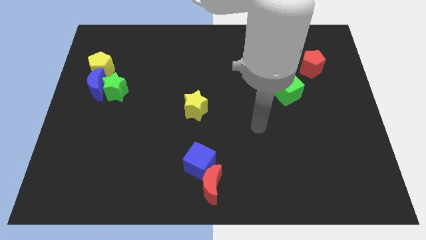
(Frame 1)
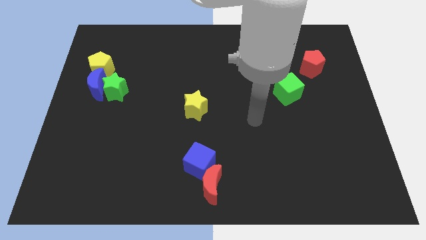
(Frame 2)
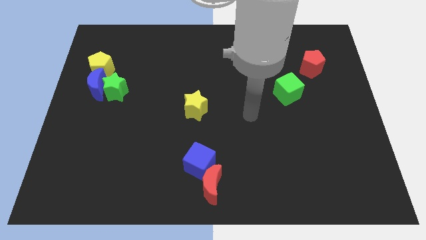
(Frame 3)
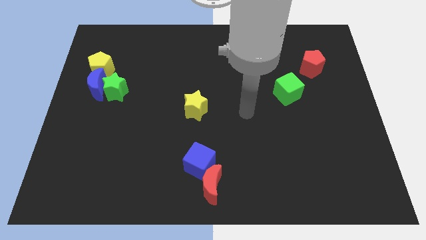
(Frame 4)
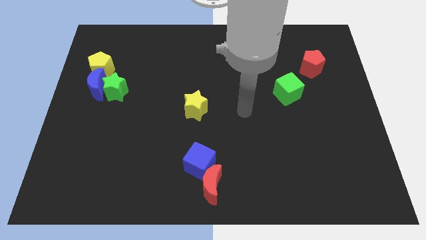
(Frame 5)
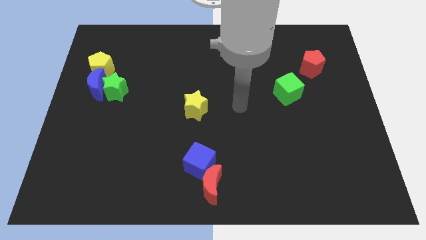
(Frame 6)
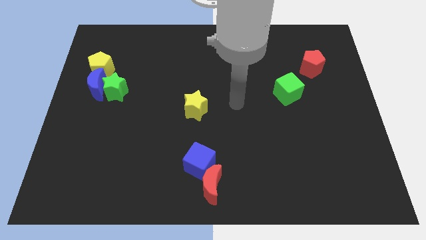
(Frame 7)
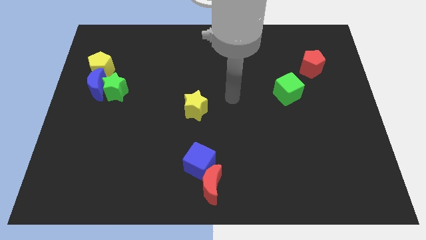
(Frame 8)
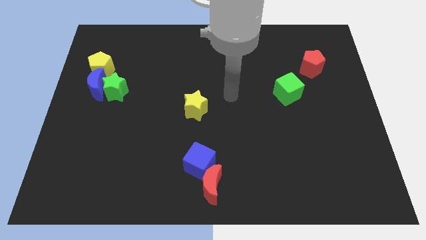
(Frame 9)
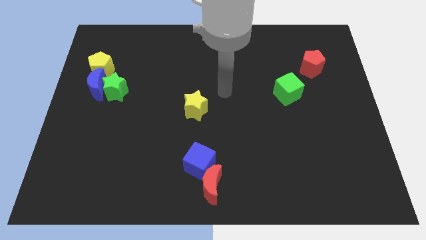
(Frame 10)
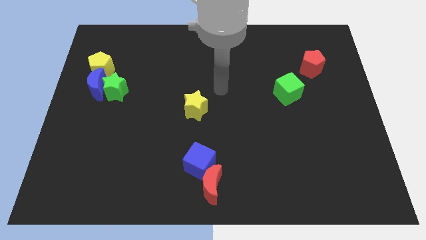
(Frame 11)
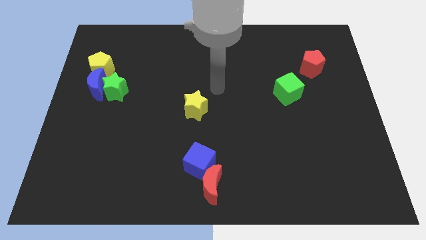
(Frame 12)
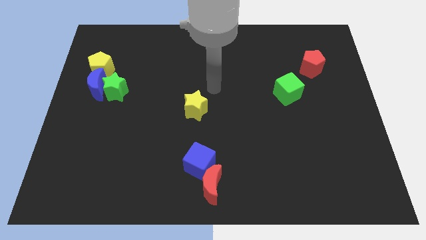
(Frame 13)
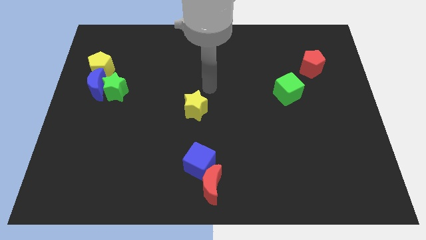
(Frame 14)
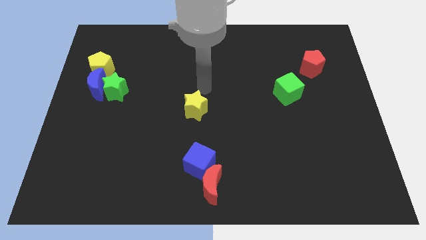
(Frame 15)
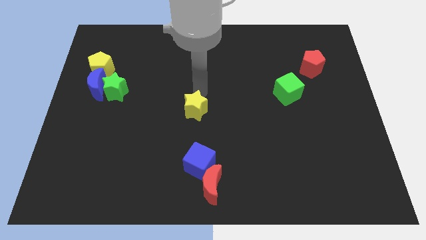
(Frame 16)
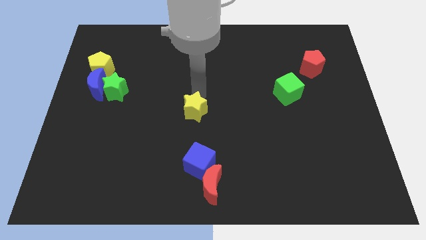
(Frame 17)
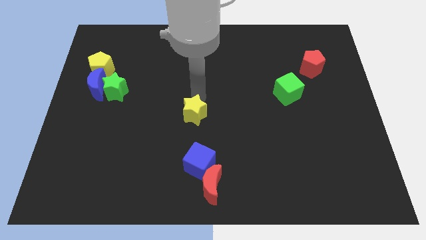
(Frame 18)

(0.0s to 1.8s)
point your arm above the yellow star

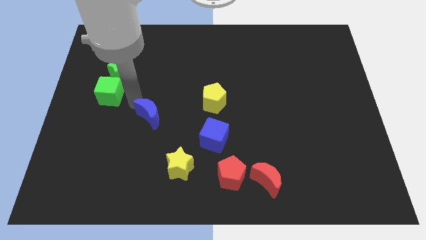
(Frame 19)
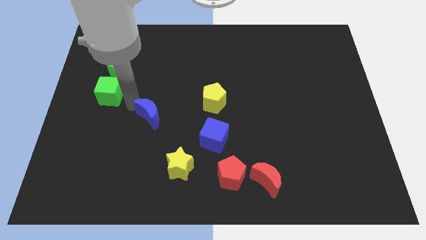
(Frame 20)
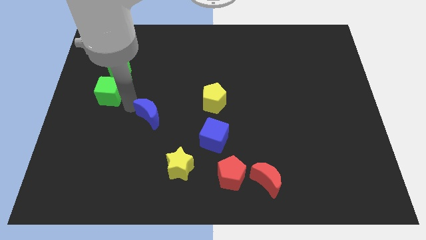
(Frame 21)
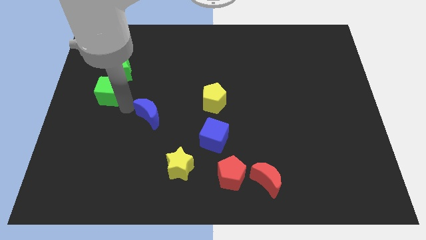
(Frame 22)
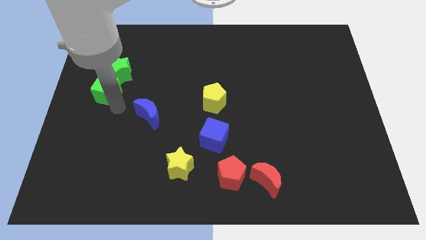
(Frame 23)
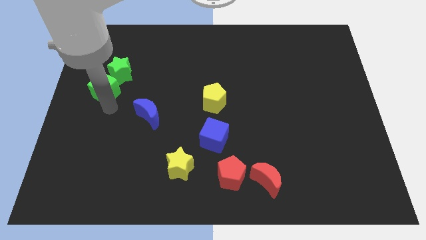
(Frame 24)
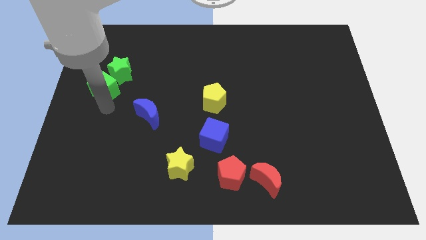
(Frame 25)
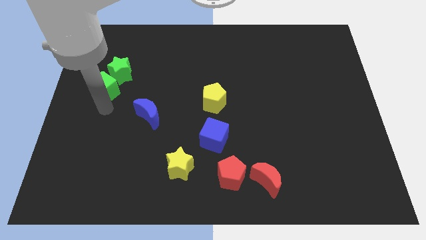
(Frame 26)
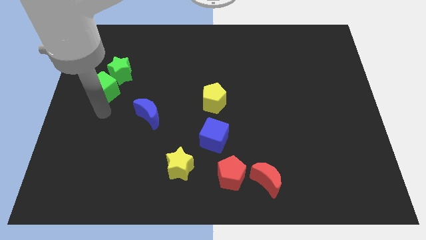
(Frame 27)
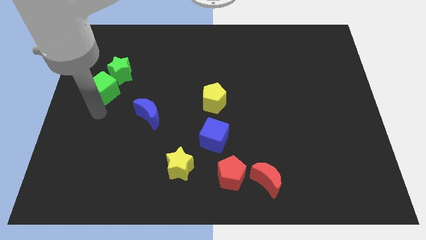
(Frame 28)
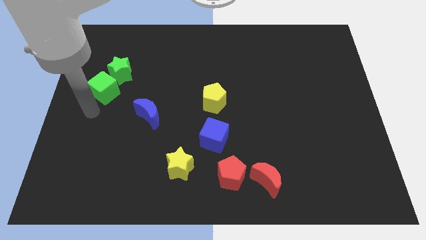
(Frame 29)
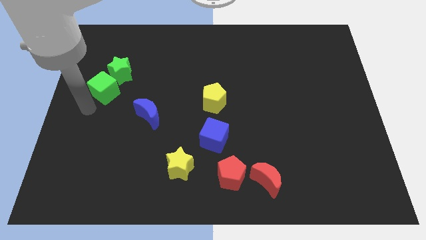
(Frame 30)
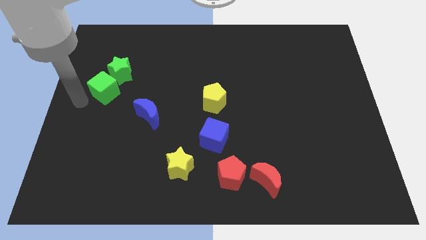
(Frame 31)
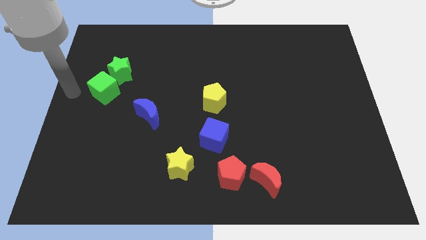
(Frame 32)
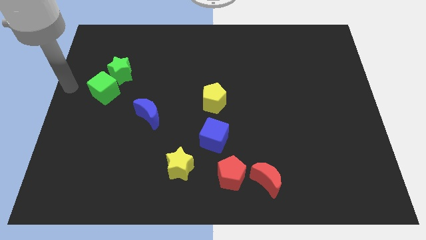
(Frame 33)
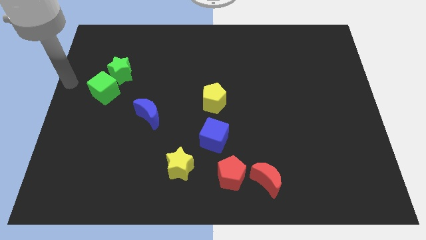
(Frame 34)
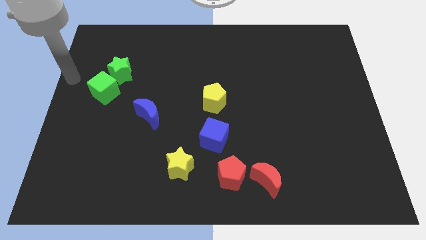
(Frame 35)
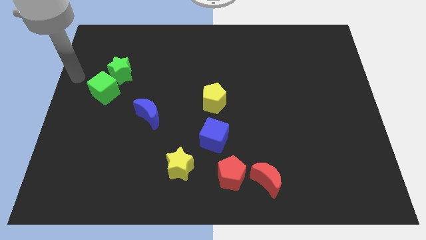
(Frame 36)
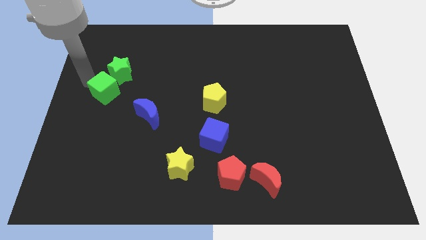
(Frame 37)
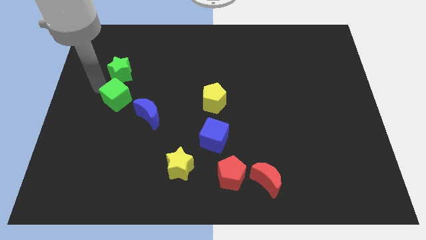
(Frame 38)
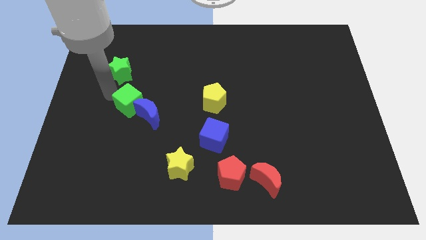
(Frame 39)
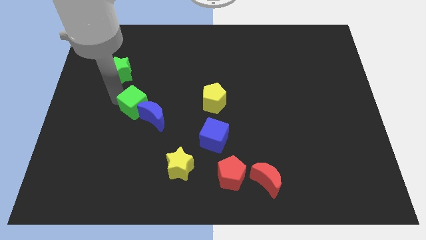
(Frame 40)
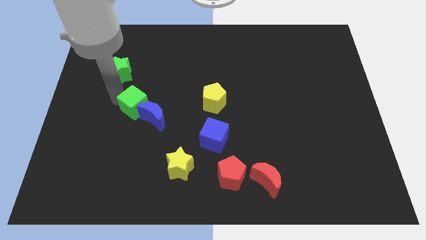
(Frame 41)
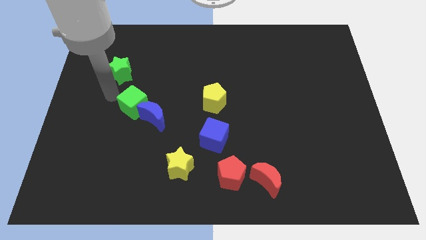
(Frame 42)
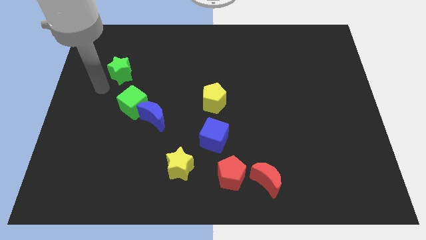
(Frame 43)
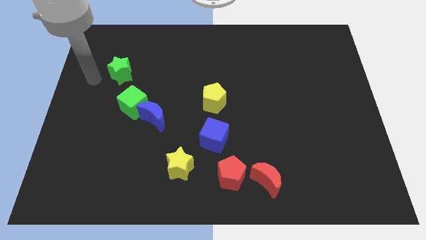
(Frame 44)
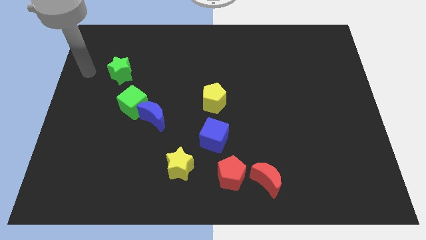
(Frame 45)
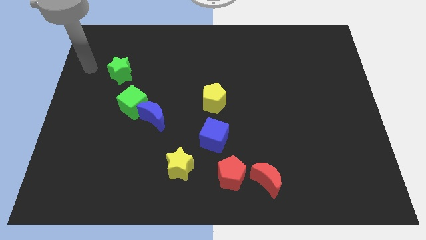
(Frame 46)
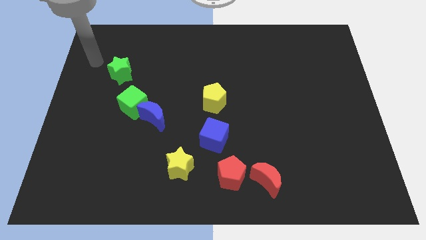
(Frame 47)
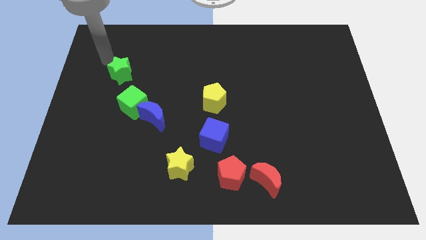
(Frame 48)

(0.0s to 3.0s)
move the green cube diagonally above the blue moon

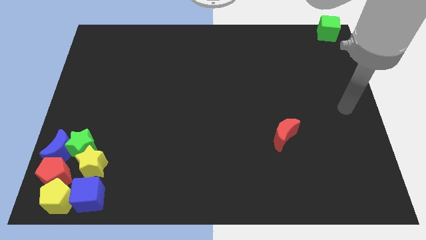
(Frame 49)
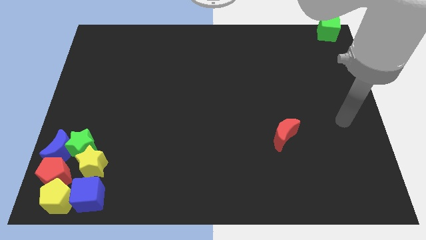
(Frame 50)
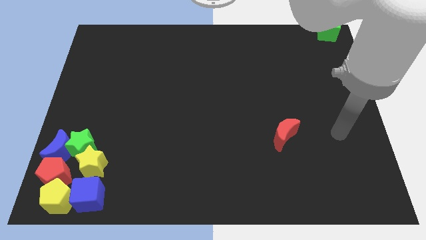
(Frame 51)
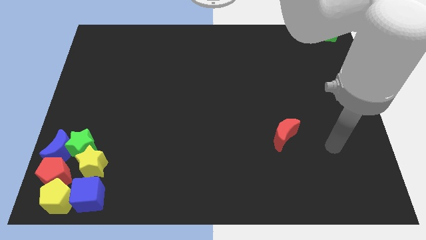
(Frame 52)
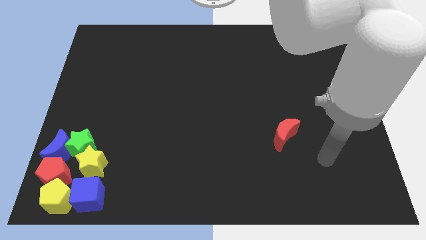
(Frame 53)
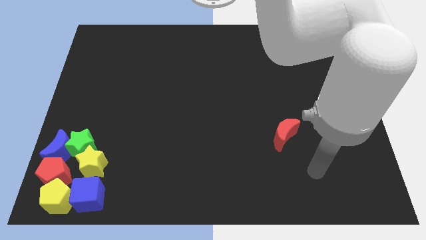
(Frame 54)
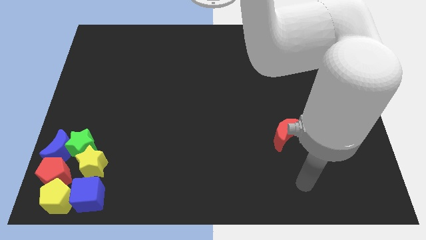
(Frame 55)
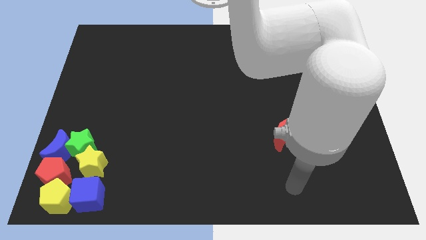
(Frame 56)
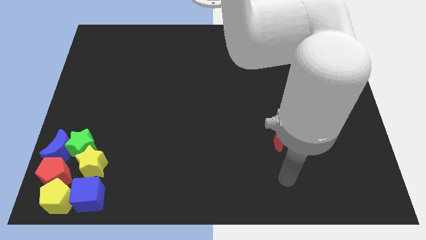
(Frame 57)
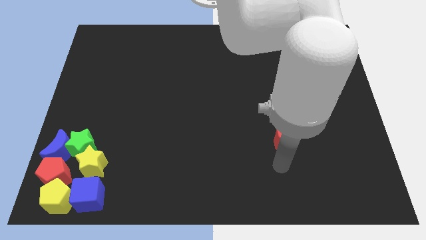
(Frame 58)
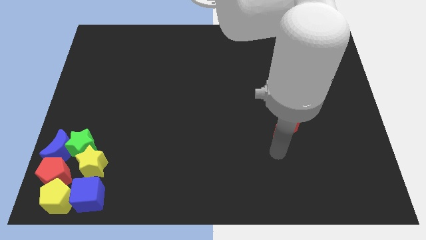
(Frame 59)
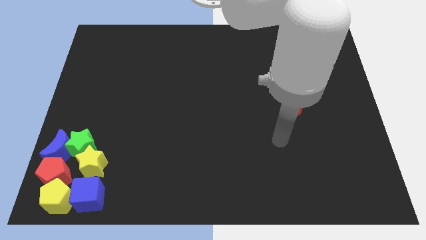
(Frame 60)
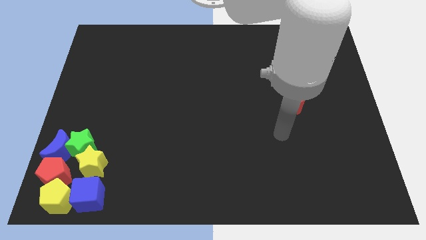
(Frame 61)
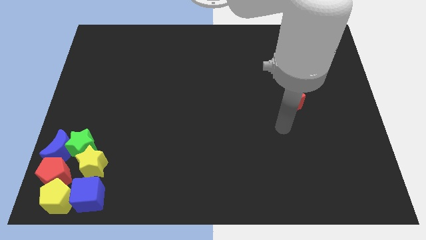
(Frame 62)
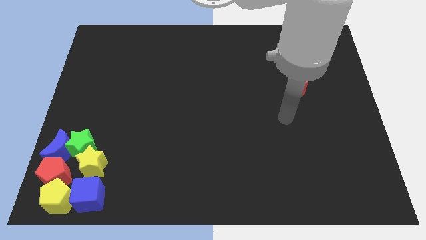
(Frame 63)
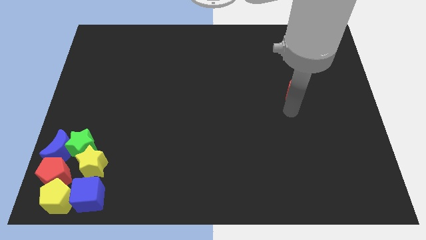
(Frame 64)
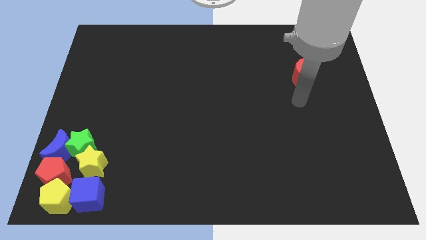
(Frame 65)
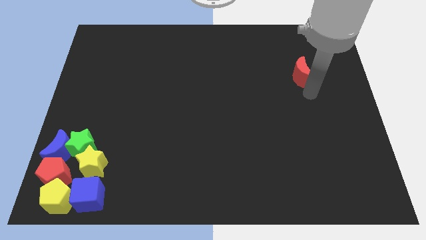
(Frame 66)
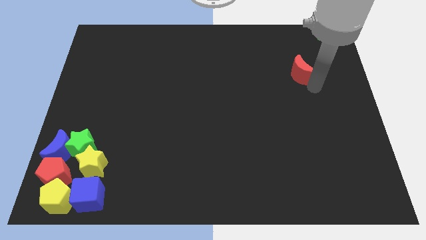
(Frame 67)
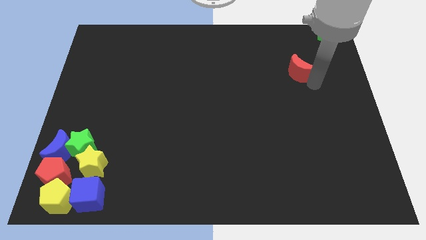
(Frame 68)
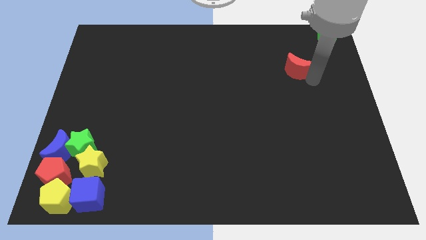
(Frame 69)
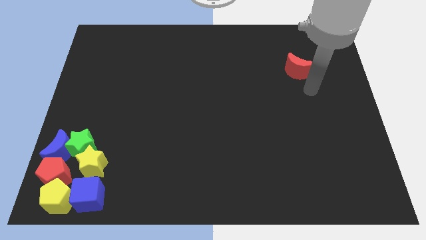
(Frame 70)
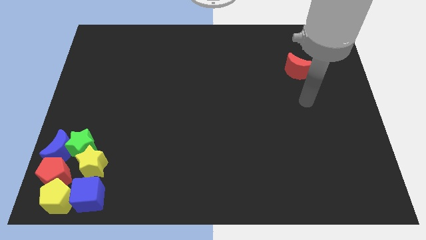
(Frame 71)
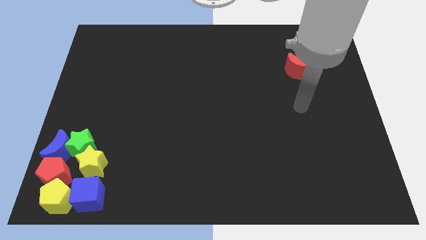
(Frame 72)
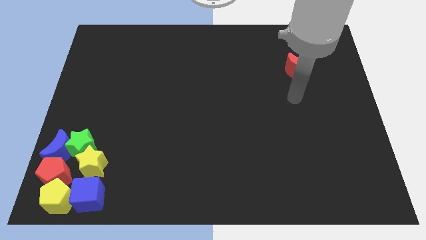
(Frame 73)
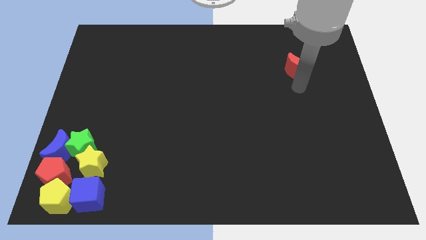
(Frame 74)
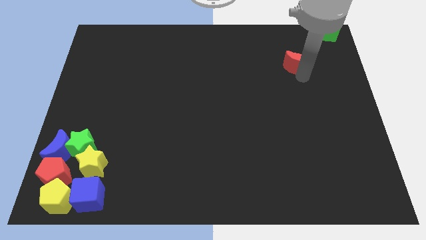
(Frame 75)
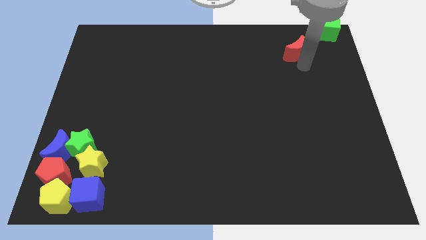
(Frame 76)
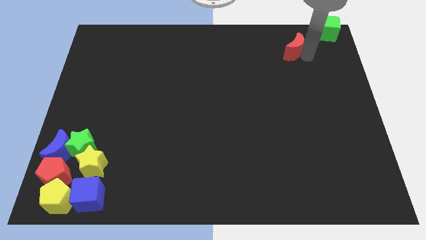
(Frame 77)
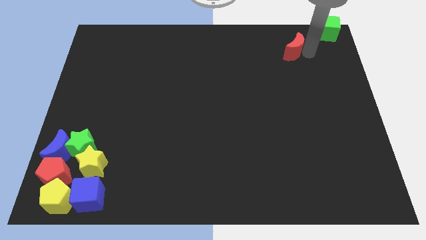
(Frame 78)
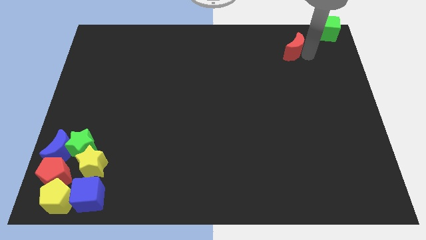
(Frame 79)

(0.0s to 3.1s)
slide red moon up to the bottom left of green cube

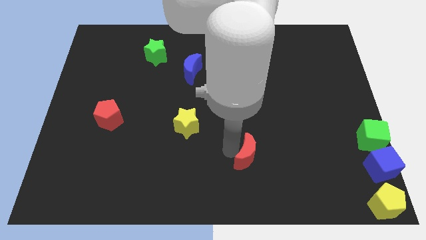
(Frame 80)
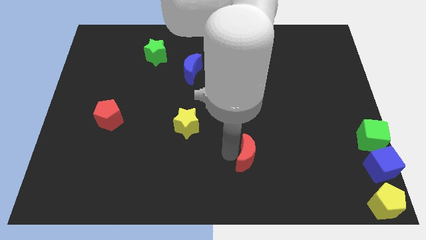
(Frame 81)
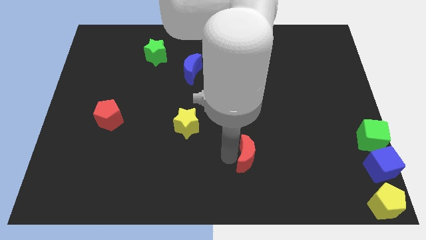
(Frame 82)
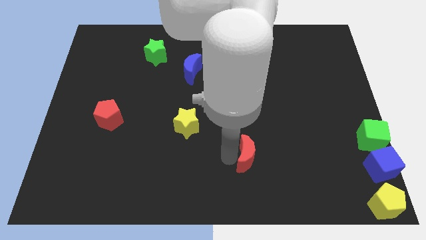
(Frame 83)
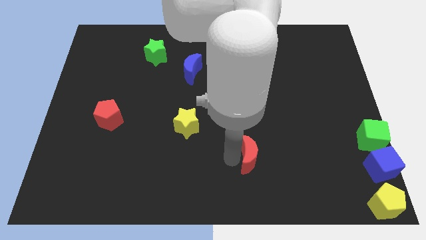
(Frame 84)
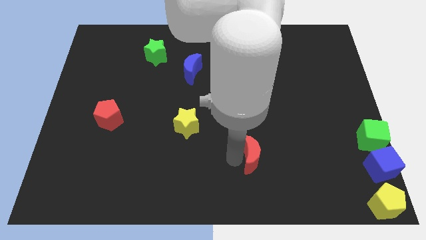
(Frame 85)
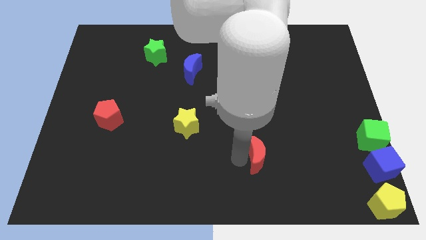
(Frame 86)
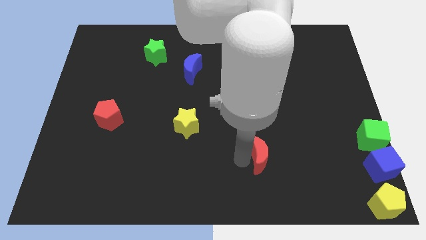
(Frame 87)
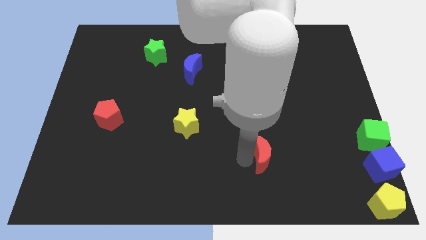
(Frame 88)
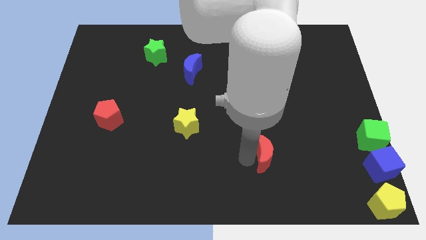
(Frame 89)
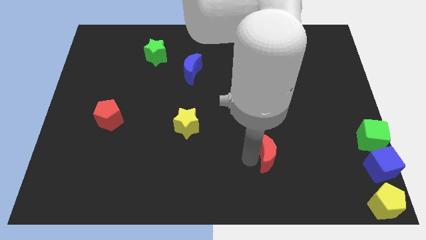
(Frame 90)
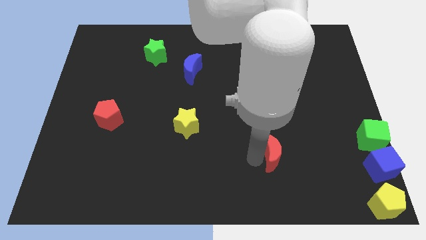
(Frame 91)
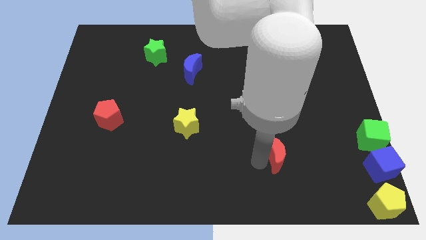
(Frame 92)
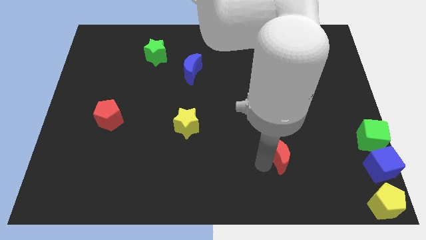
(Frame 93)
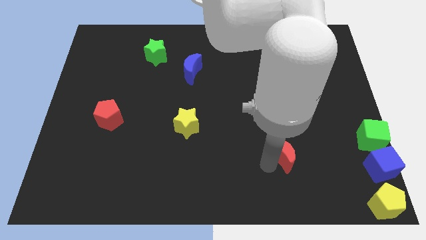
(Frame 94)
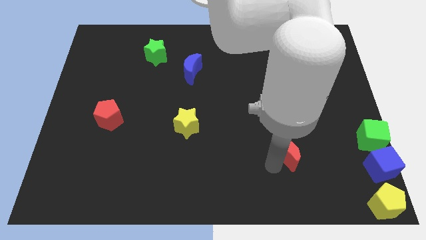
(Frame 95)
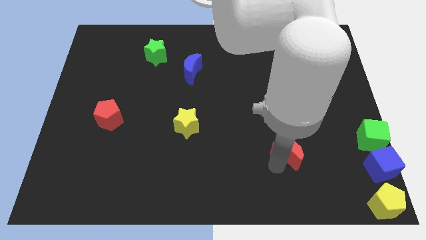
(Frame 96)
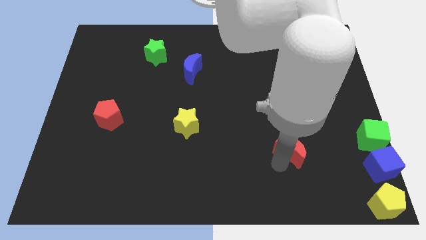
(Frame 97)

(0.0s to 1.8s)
drag the red moon to the right side of the board
